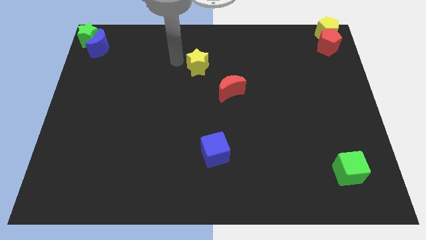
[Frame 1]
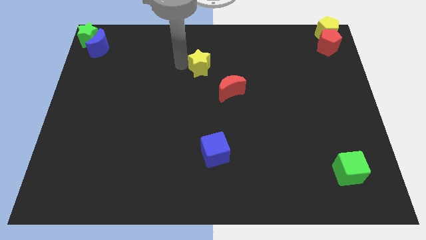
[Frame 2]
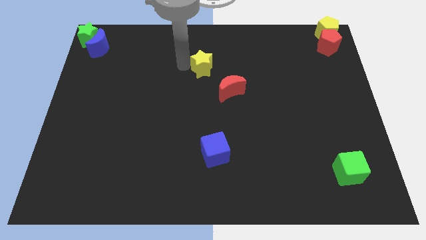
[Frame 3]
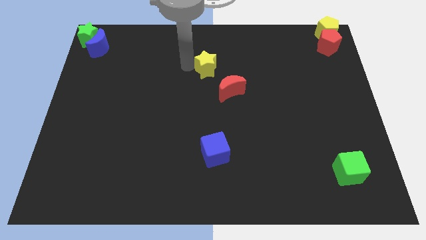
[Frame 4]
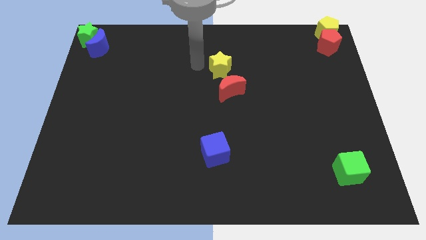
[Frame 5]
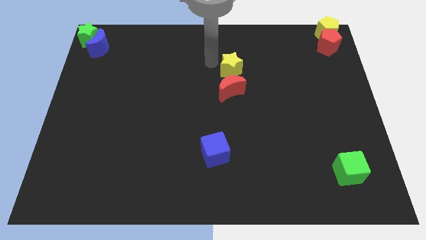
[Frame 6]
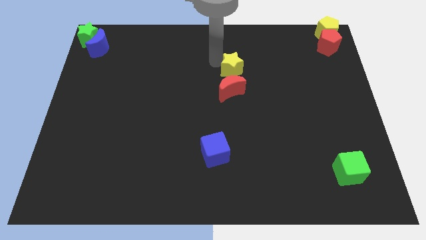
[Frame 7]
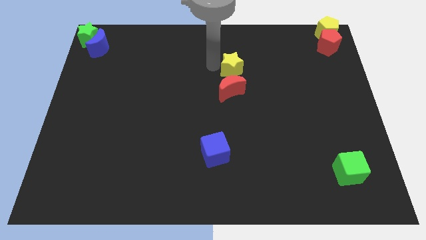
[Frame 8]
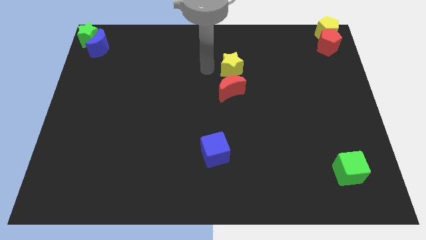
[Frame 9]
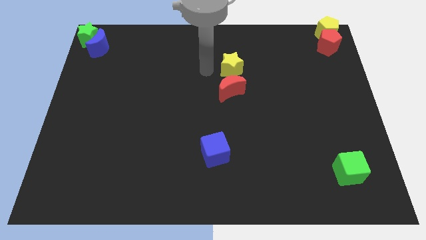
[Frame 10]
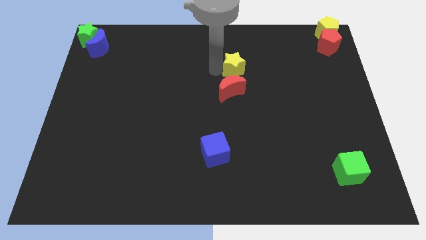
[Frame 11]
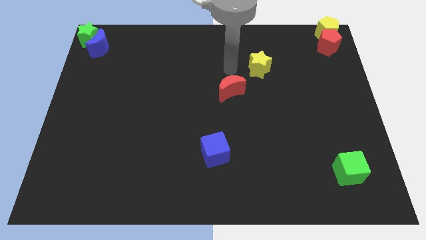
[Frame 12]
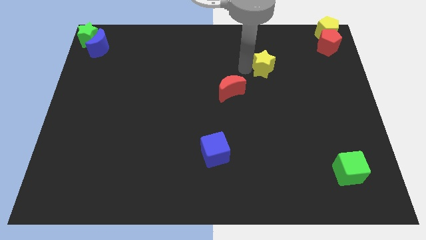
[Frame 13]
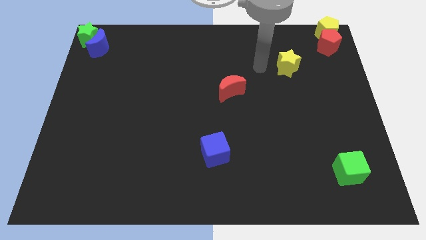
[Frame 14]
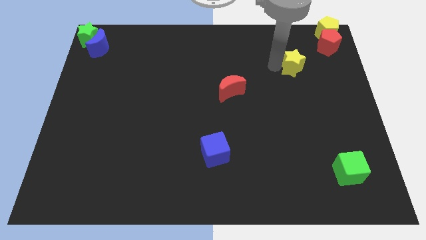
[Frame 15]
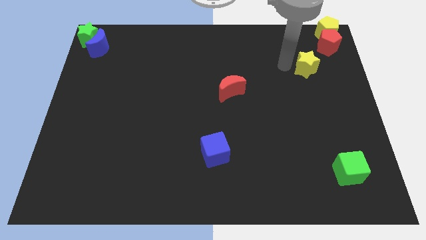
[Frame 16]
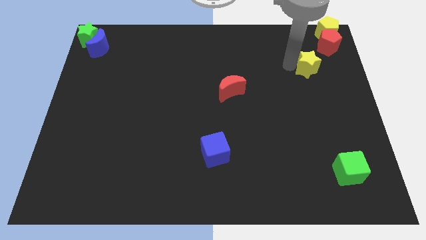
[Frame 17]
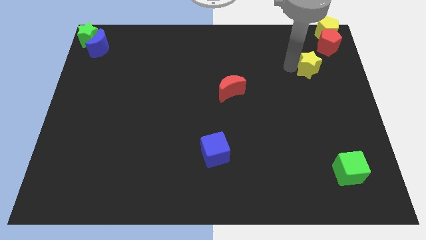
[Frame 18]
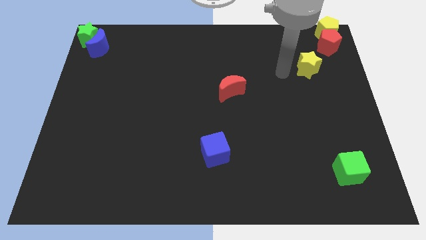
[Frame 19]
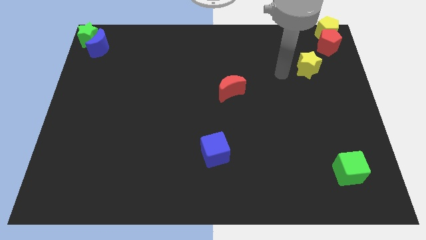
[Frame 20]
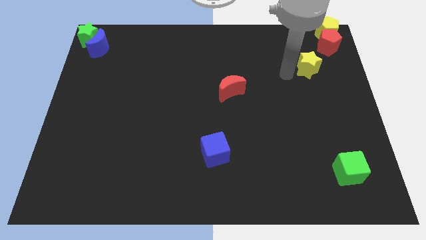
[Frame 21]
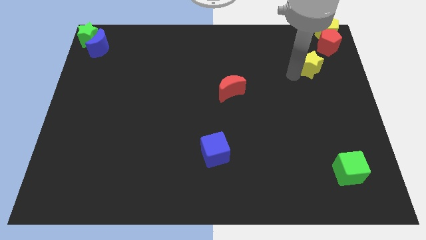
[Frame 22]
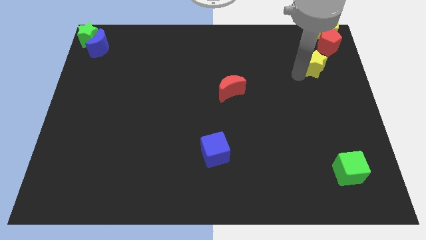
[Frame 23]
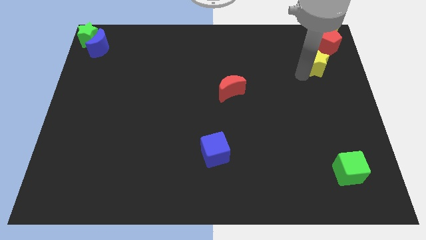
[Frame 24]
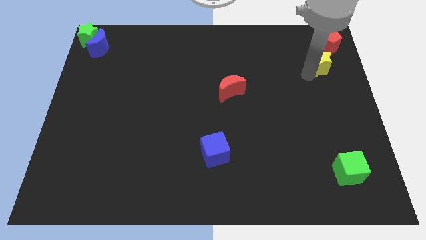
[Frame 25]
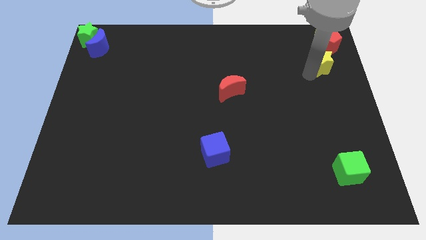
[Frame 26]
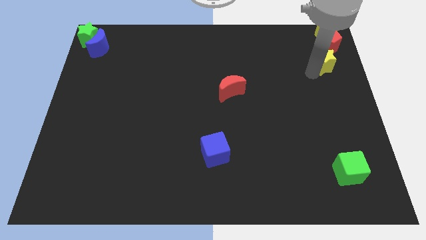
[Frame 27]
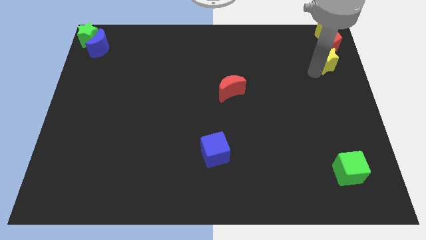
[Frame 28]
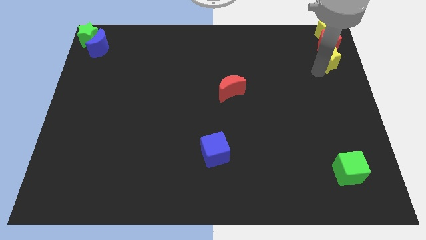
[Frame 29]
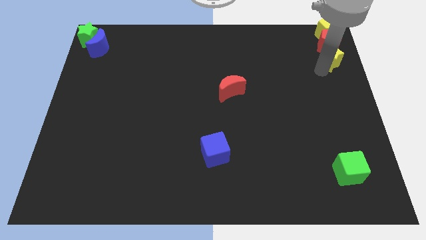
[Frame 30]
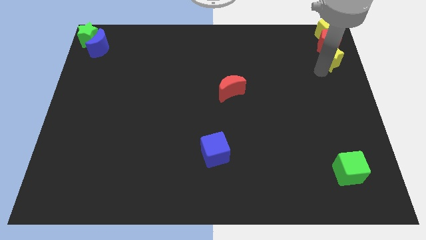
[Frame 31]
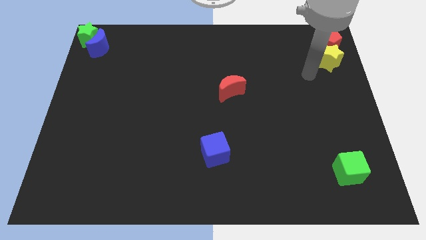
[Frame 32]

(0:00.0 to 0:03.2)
push the yellow star to the bottom of the red pentagon

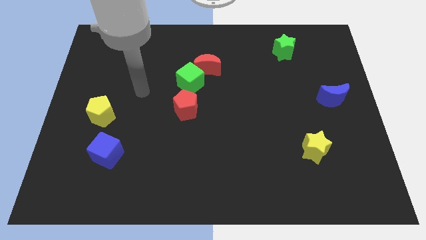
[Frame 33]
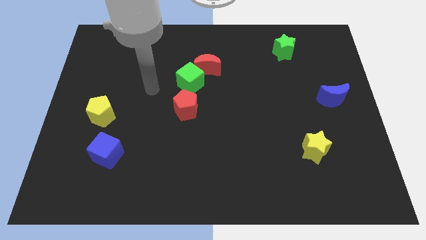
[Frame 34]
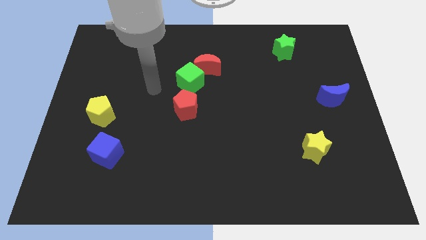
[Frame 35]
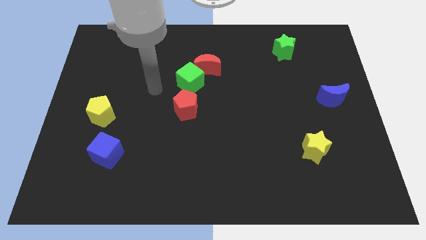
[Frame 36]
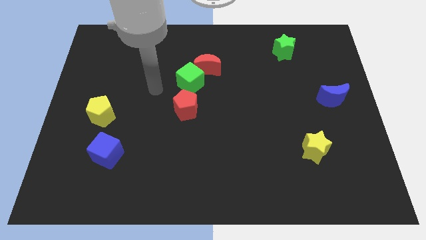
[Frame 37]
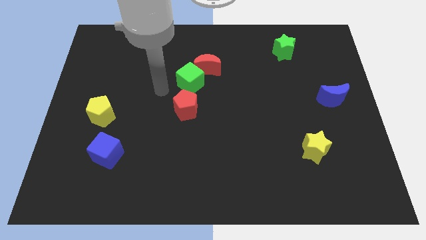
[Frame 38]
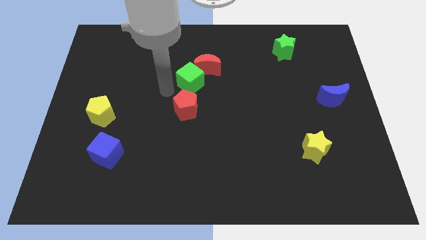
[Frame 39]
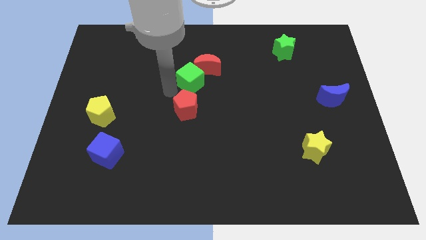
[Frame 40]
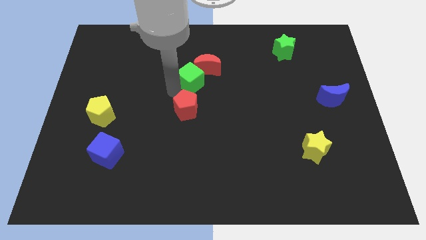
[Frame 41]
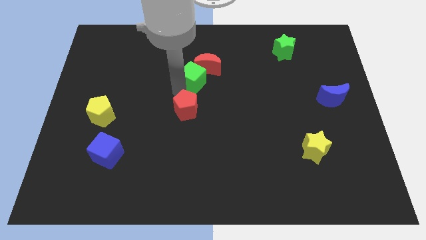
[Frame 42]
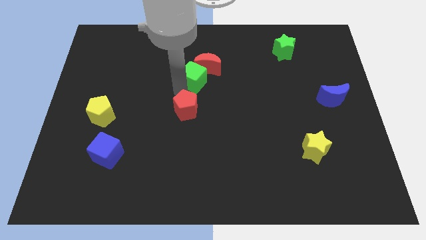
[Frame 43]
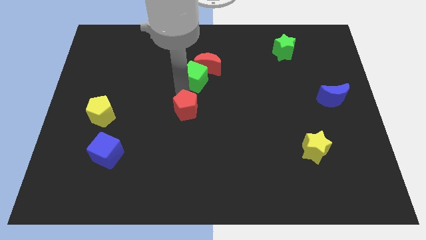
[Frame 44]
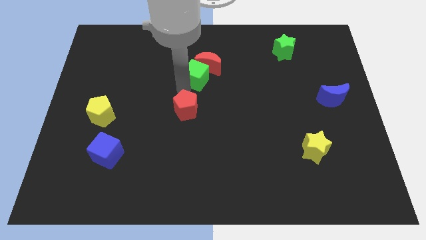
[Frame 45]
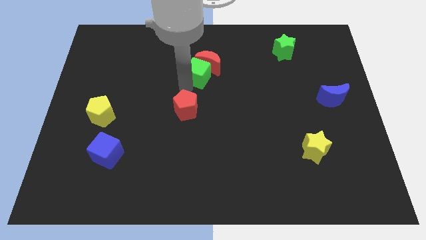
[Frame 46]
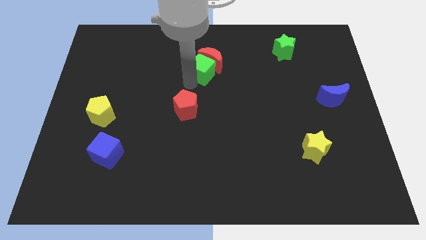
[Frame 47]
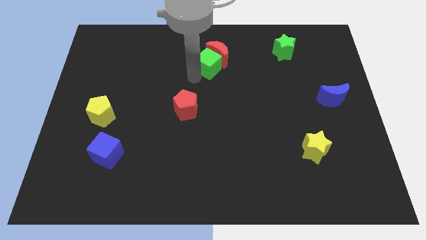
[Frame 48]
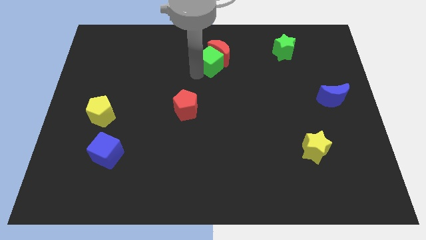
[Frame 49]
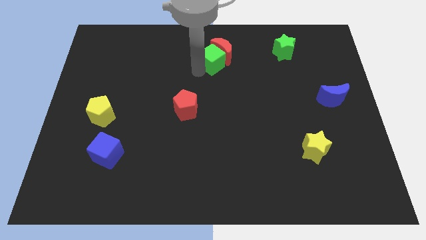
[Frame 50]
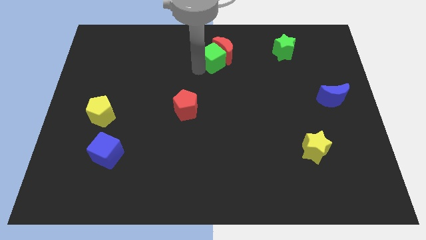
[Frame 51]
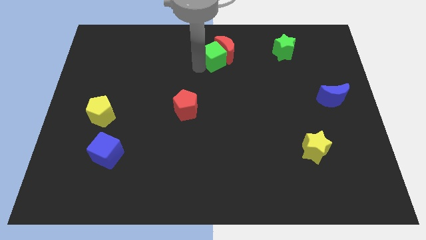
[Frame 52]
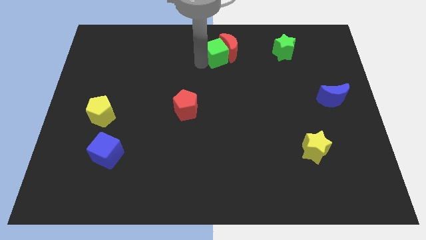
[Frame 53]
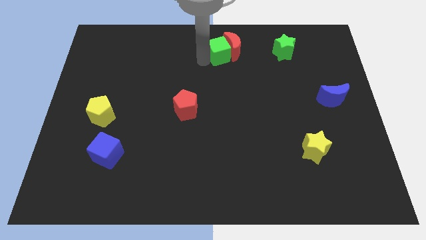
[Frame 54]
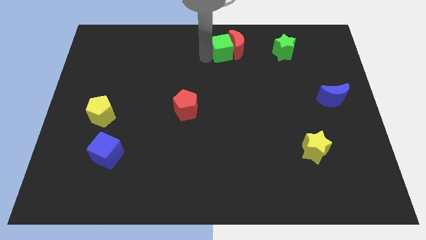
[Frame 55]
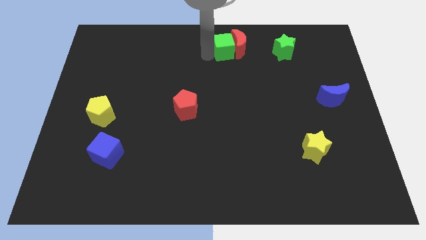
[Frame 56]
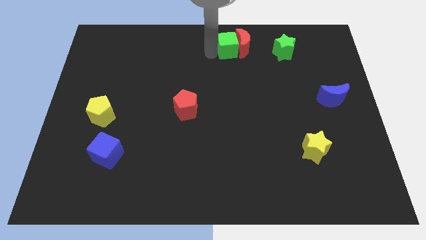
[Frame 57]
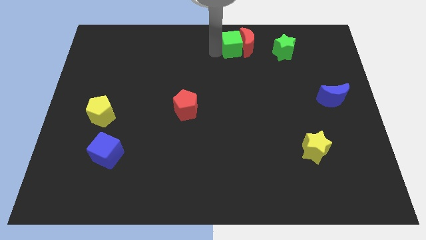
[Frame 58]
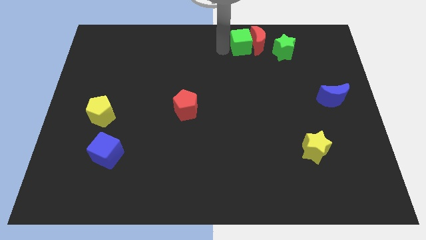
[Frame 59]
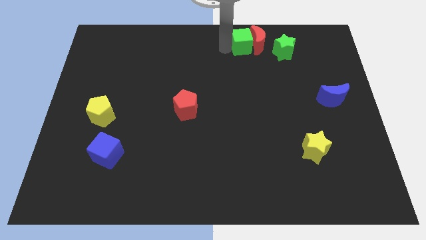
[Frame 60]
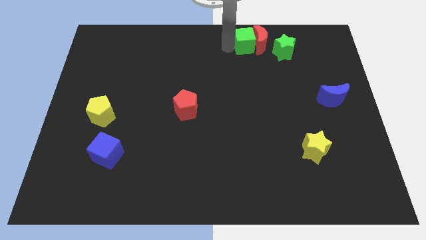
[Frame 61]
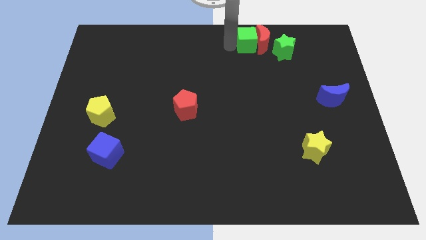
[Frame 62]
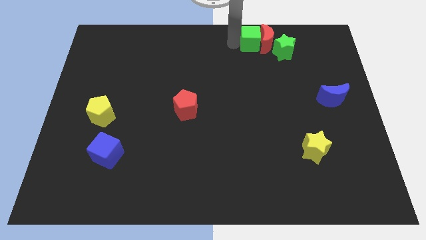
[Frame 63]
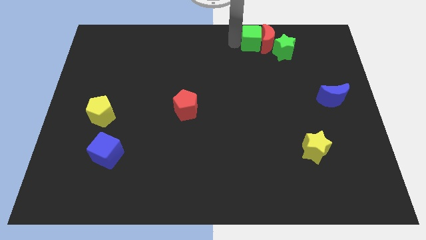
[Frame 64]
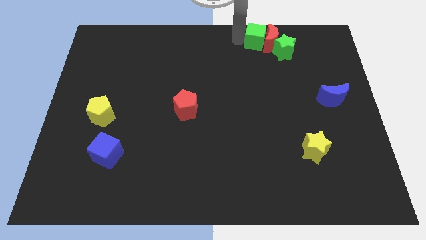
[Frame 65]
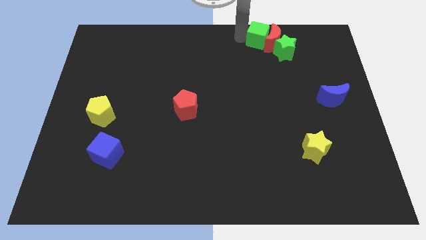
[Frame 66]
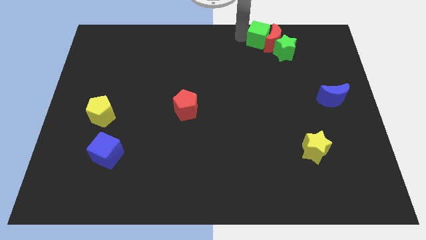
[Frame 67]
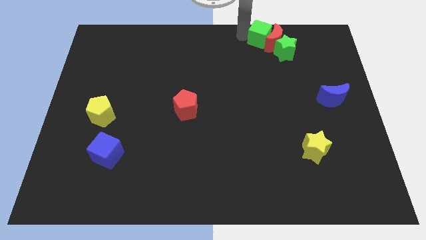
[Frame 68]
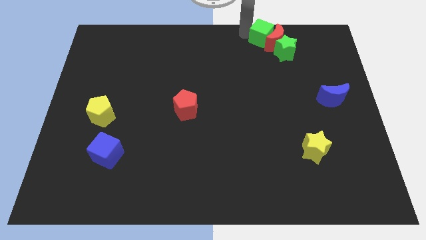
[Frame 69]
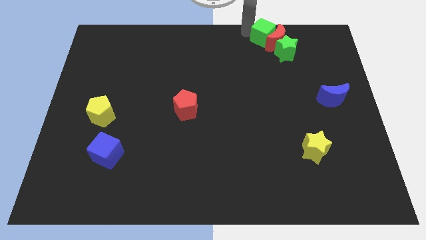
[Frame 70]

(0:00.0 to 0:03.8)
push the green cube into the red crescent

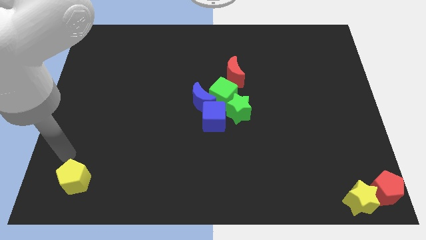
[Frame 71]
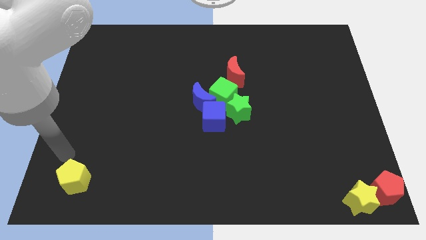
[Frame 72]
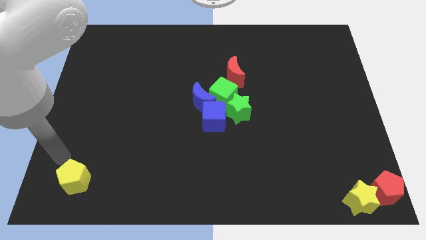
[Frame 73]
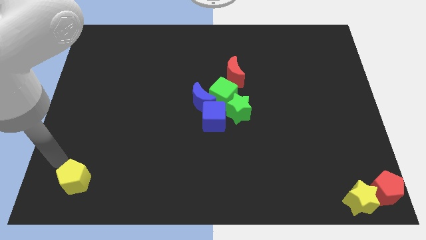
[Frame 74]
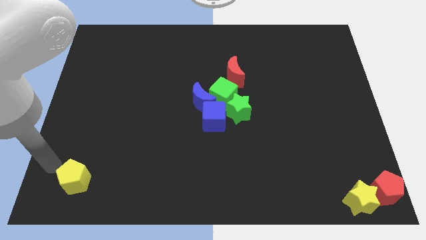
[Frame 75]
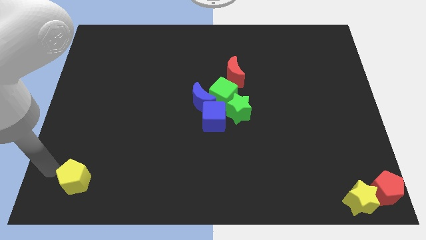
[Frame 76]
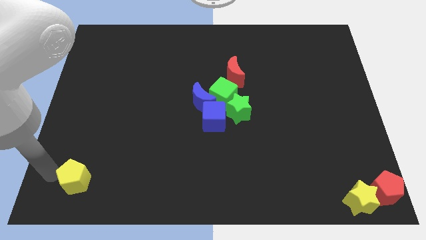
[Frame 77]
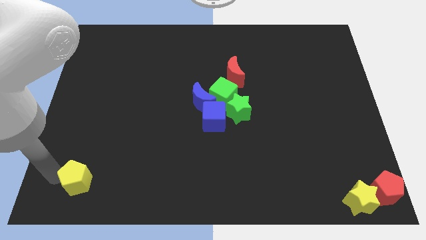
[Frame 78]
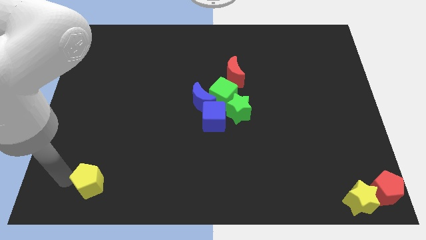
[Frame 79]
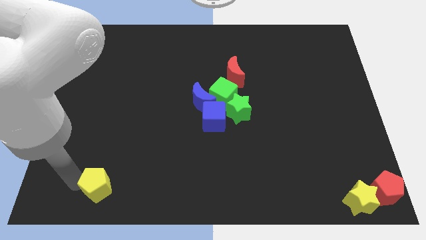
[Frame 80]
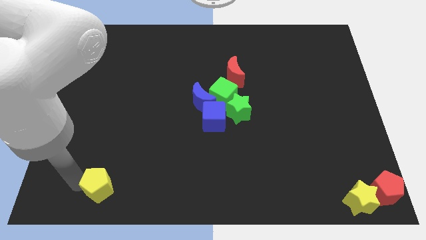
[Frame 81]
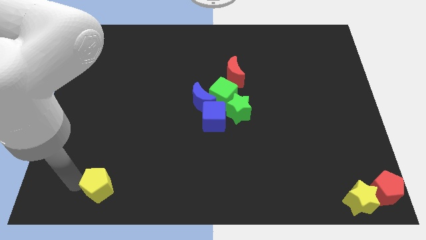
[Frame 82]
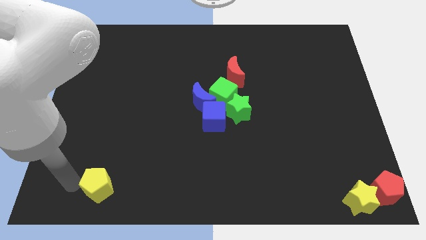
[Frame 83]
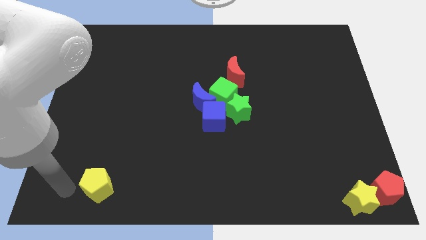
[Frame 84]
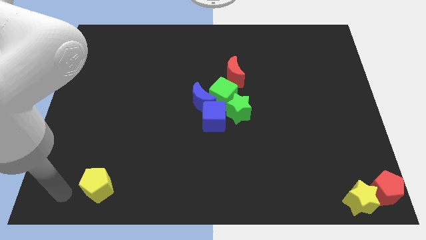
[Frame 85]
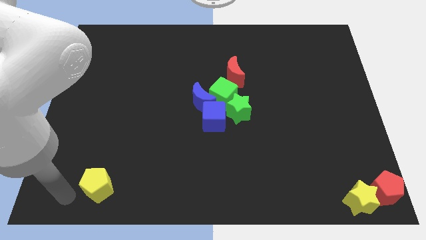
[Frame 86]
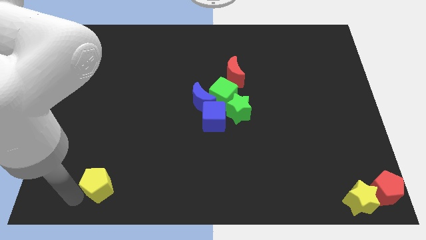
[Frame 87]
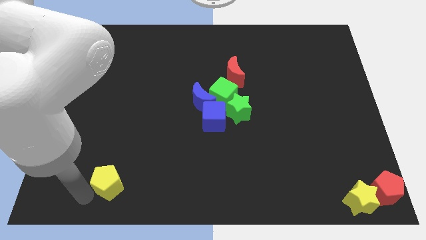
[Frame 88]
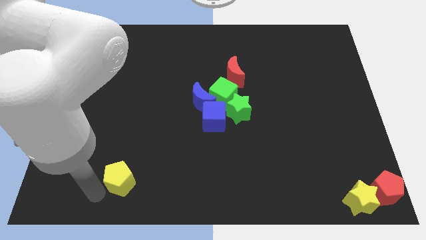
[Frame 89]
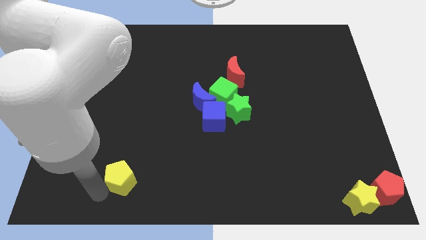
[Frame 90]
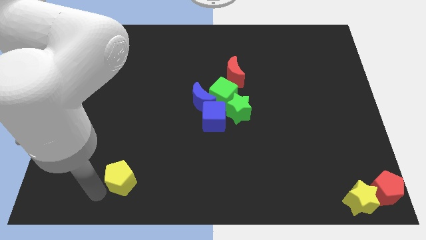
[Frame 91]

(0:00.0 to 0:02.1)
move yellow pentagon slightly right

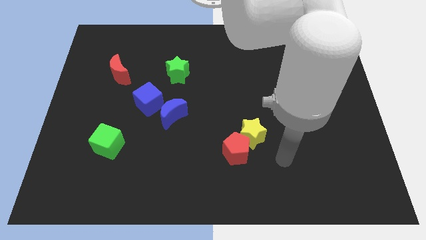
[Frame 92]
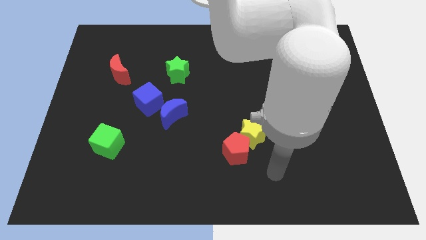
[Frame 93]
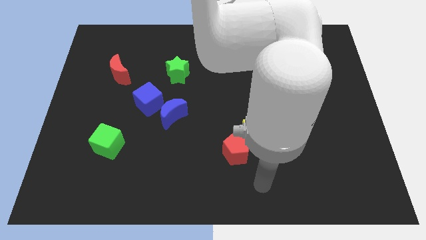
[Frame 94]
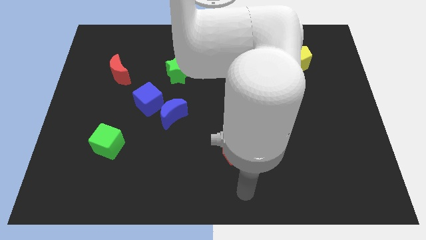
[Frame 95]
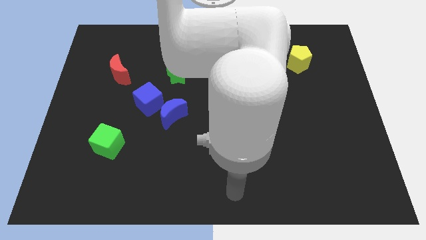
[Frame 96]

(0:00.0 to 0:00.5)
push arm at bottom center
